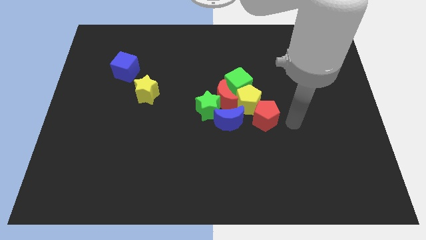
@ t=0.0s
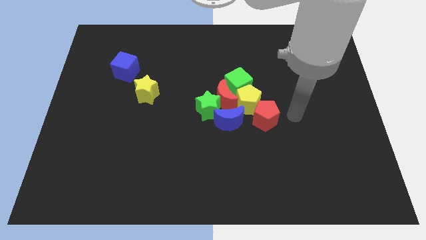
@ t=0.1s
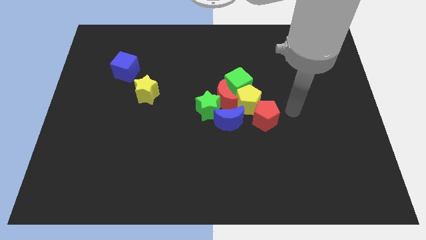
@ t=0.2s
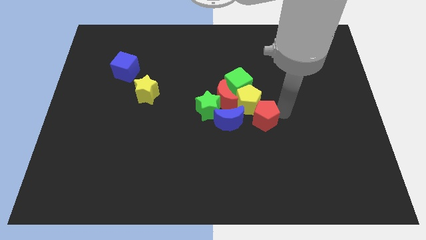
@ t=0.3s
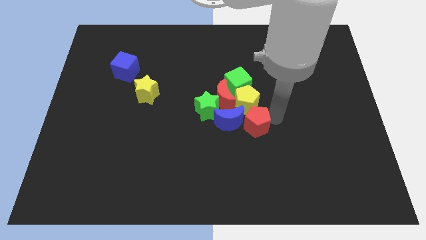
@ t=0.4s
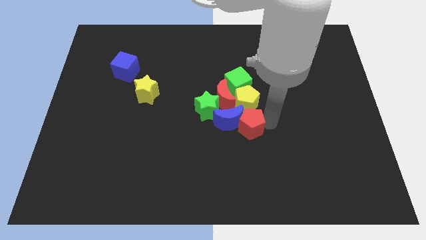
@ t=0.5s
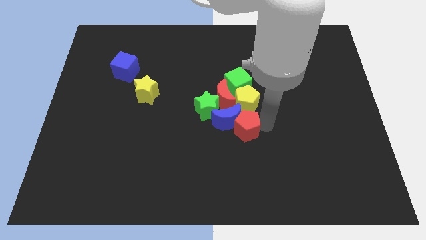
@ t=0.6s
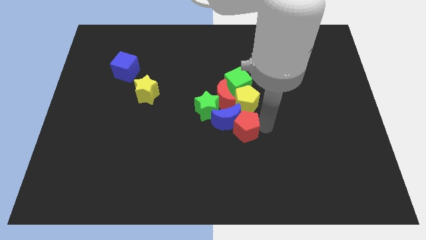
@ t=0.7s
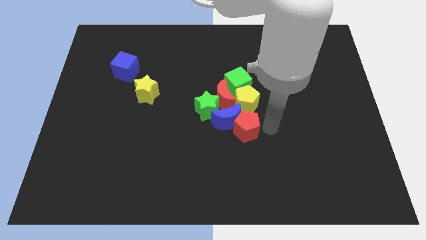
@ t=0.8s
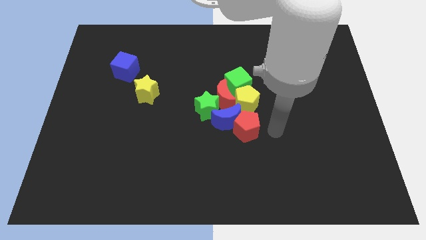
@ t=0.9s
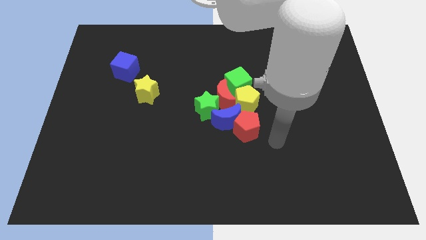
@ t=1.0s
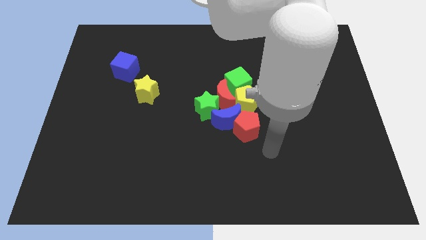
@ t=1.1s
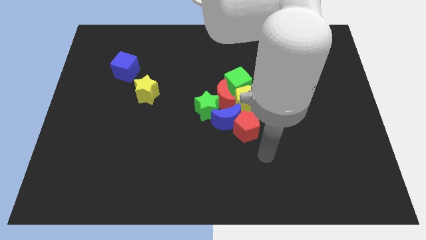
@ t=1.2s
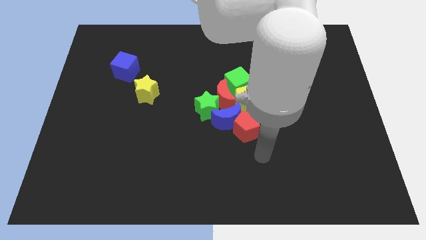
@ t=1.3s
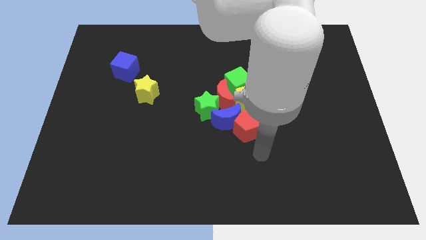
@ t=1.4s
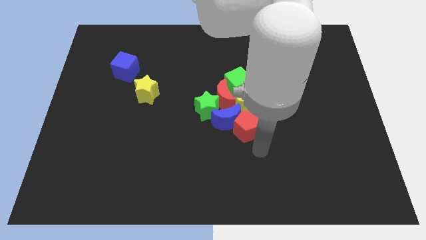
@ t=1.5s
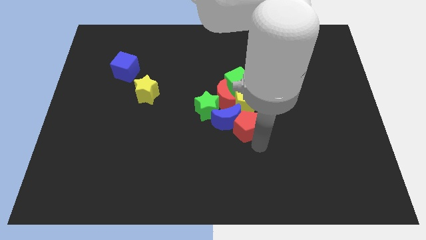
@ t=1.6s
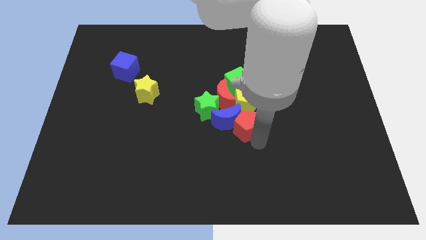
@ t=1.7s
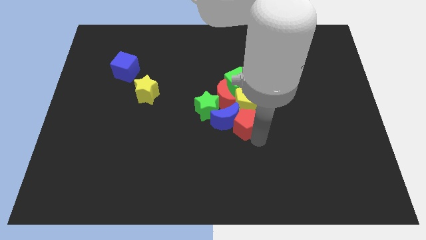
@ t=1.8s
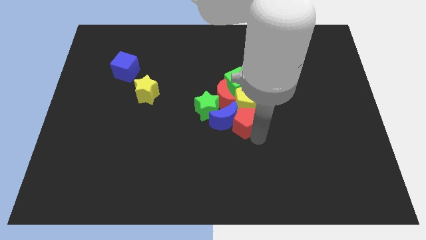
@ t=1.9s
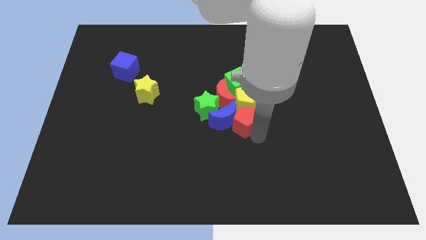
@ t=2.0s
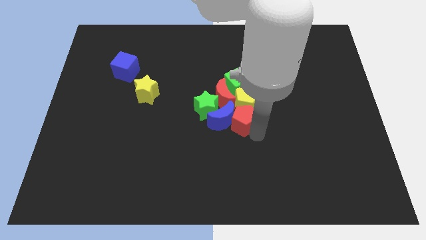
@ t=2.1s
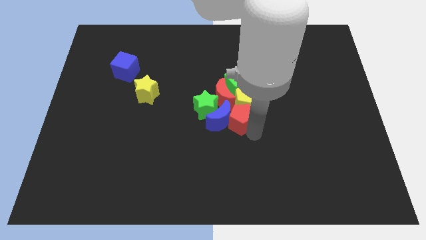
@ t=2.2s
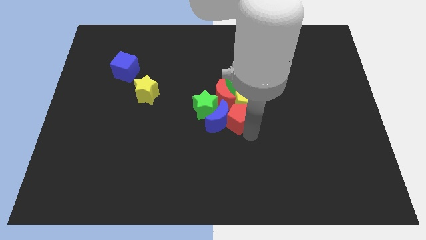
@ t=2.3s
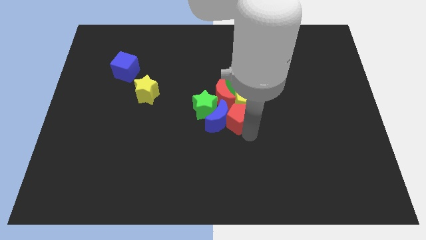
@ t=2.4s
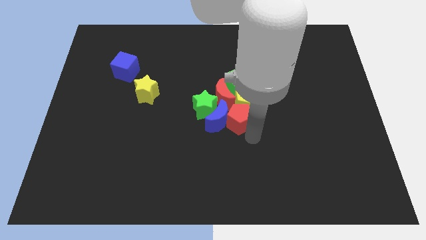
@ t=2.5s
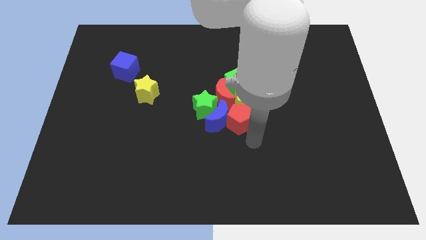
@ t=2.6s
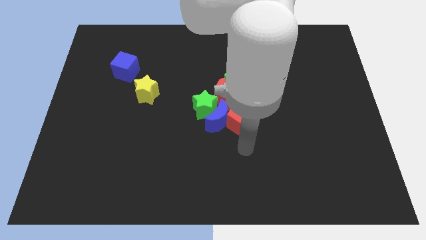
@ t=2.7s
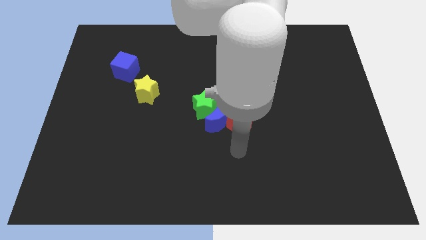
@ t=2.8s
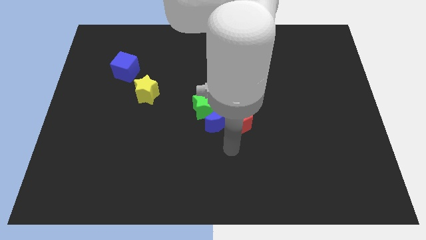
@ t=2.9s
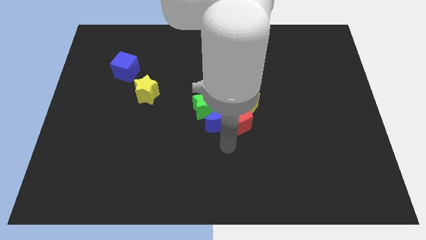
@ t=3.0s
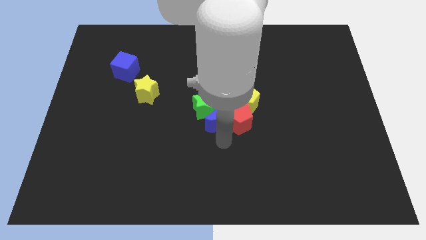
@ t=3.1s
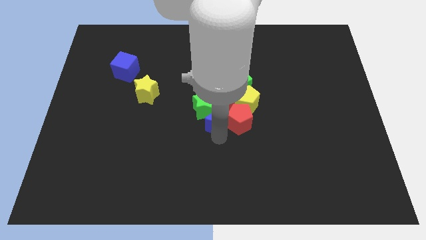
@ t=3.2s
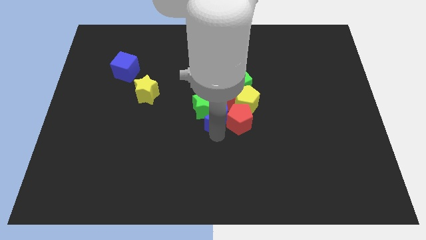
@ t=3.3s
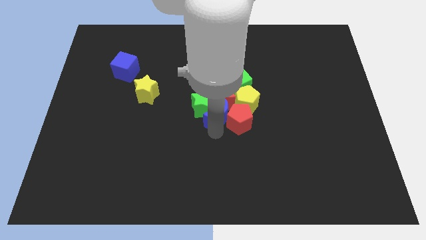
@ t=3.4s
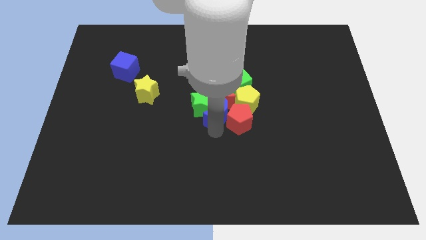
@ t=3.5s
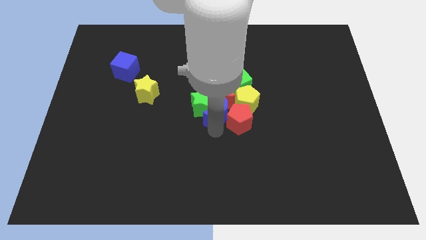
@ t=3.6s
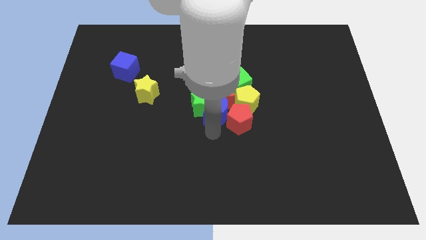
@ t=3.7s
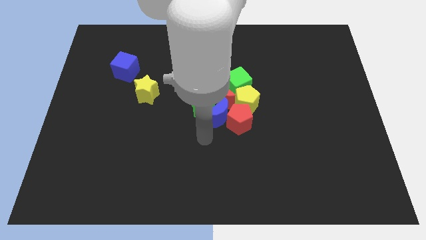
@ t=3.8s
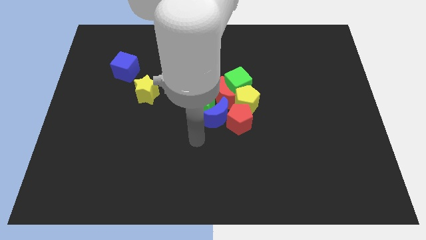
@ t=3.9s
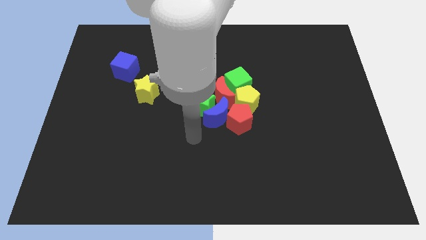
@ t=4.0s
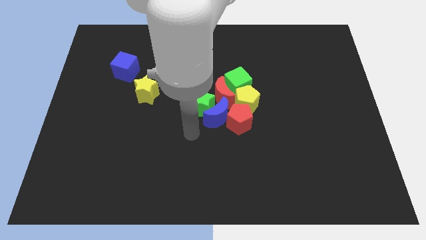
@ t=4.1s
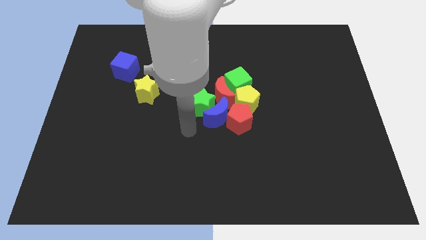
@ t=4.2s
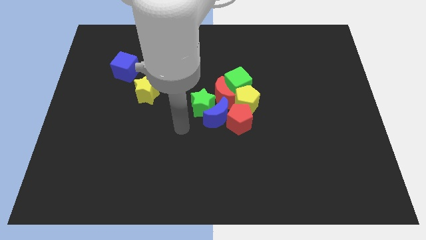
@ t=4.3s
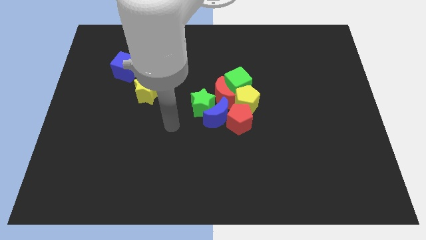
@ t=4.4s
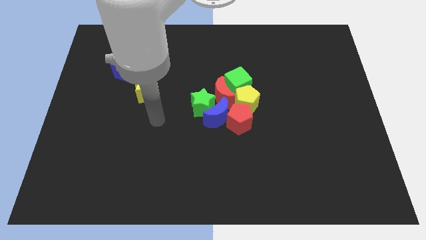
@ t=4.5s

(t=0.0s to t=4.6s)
move the red pentagon to the bottom of the yellow pentagon

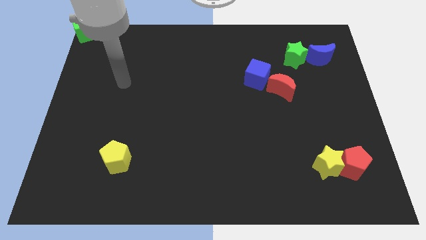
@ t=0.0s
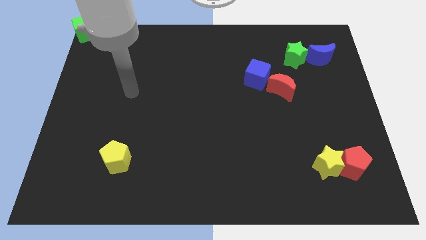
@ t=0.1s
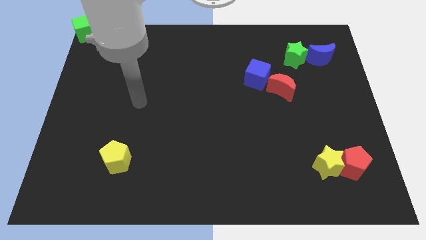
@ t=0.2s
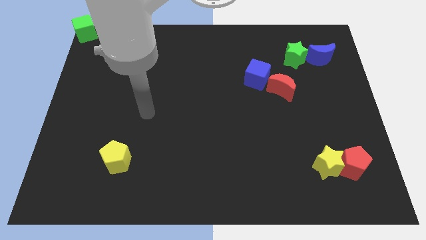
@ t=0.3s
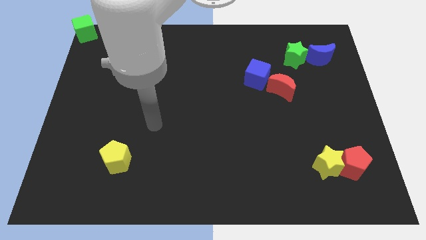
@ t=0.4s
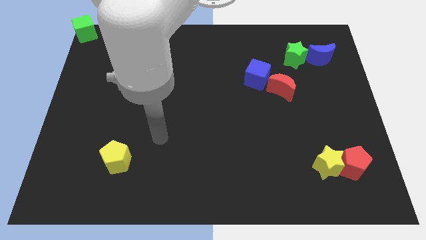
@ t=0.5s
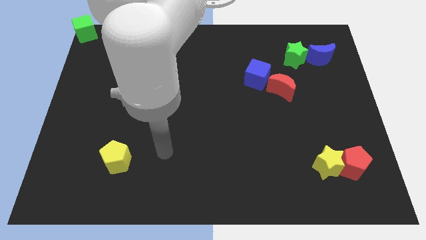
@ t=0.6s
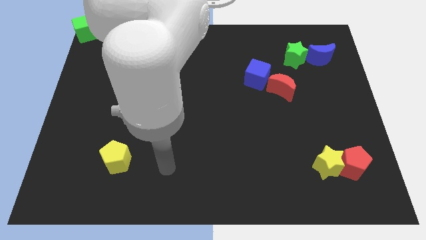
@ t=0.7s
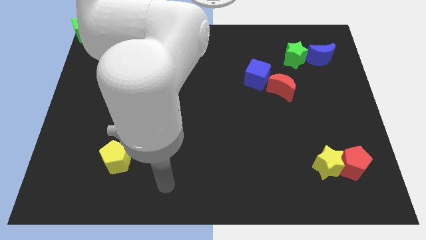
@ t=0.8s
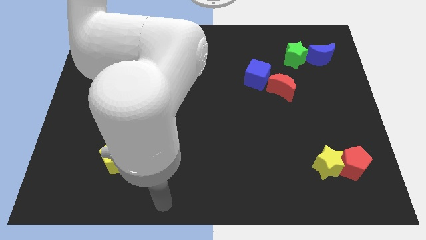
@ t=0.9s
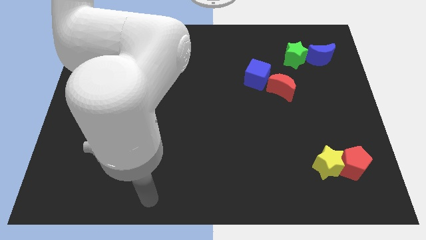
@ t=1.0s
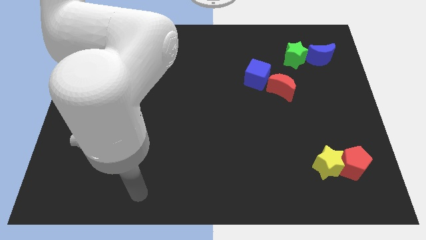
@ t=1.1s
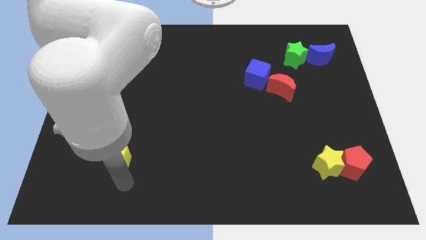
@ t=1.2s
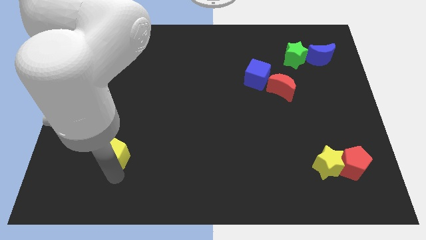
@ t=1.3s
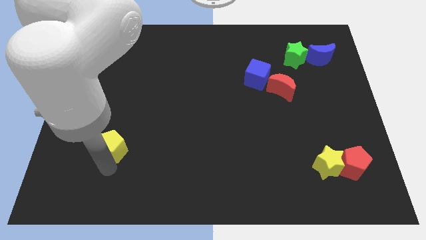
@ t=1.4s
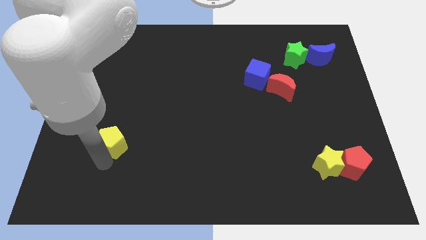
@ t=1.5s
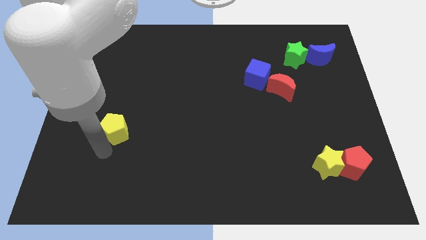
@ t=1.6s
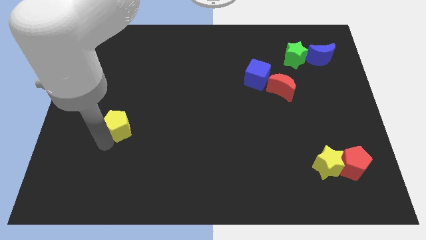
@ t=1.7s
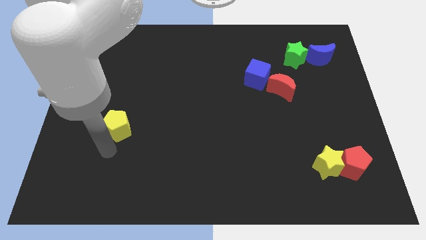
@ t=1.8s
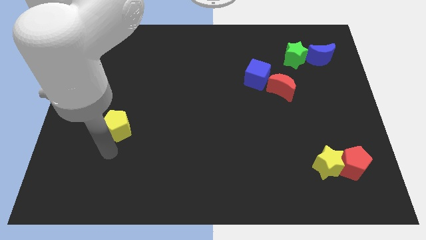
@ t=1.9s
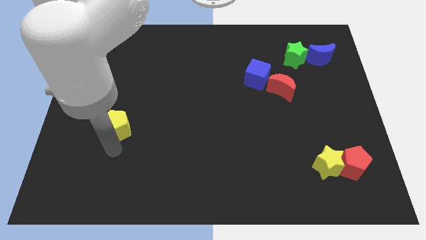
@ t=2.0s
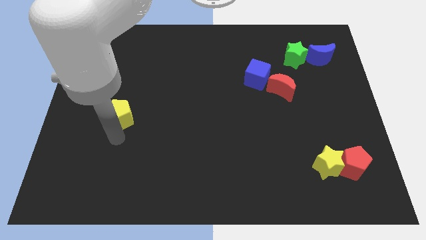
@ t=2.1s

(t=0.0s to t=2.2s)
drag the yellow pentagon to the center left of the board

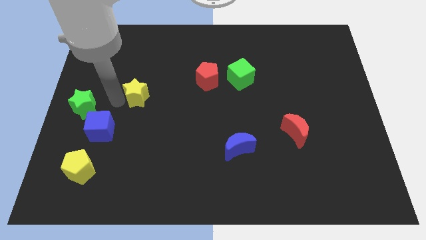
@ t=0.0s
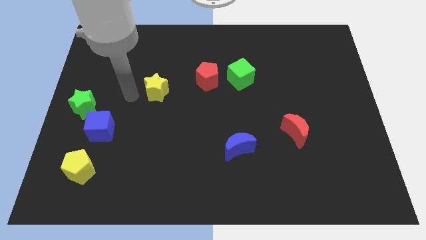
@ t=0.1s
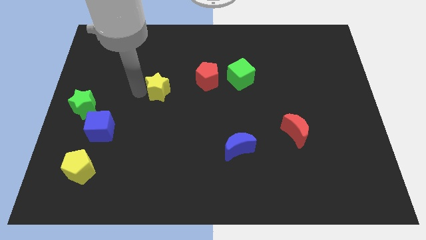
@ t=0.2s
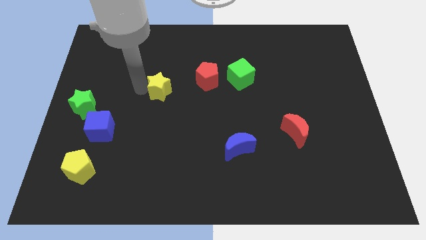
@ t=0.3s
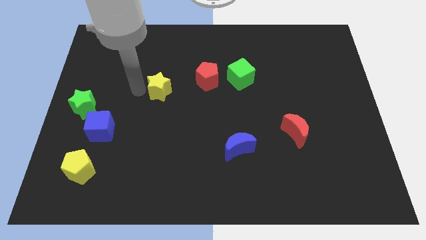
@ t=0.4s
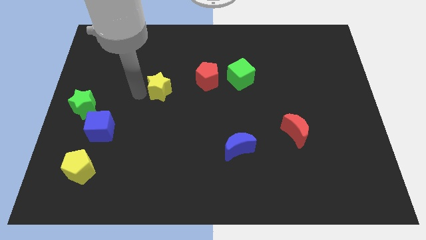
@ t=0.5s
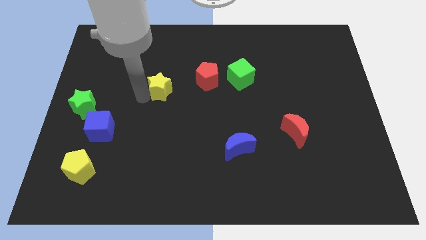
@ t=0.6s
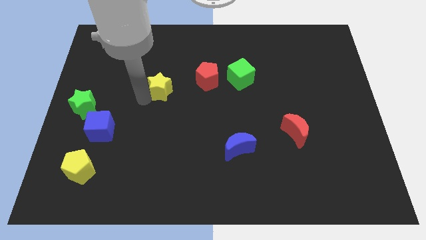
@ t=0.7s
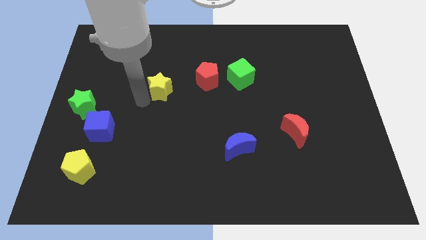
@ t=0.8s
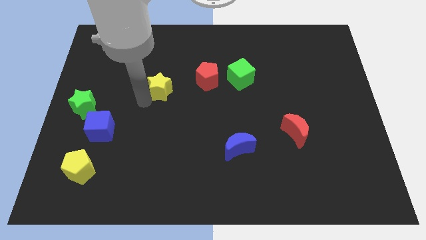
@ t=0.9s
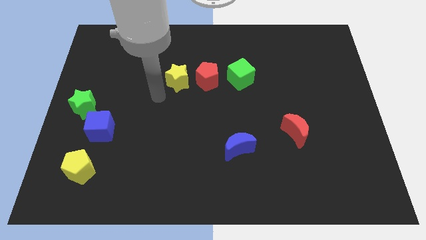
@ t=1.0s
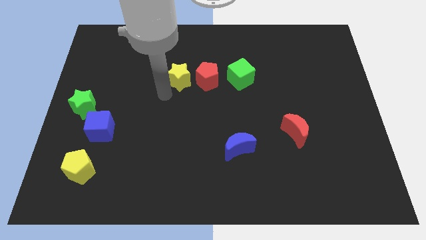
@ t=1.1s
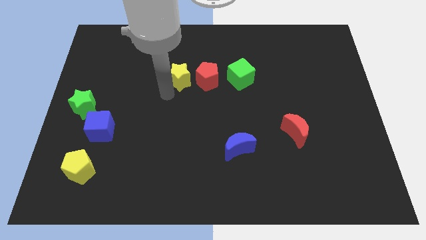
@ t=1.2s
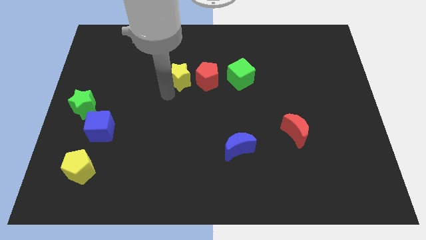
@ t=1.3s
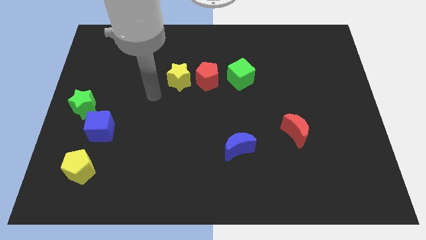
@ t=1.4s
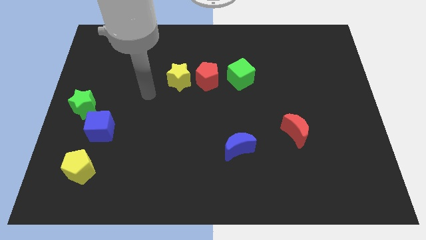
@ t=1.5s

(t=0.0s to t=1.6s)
put the yellow star left to red pentagon

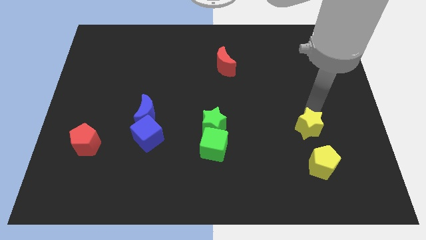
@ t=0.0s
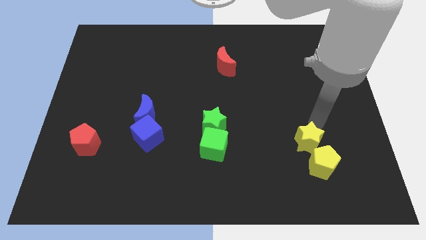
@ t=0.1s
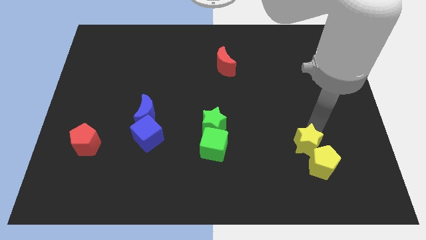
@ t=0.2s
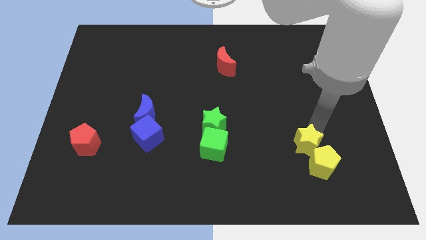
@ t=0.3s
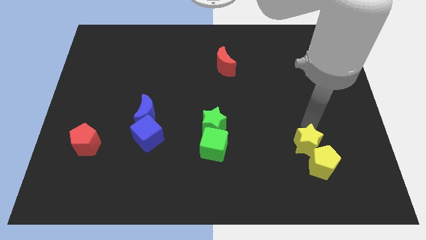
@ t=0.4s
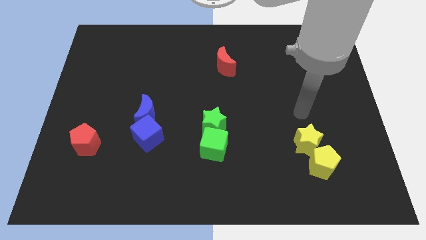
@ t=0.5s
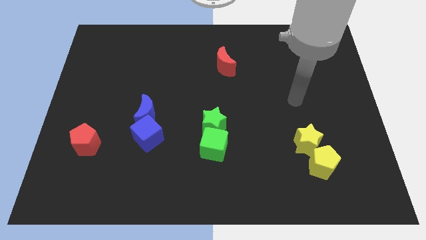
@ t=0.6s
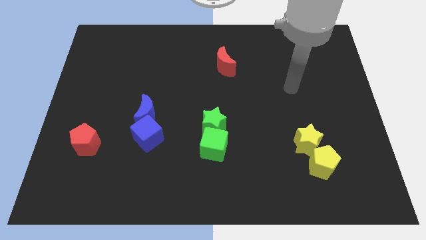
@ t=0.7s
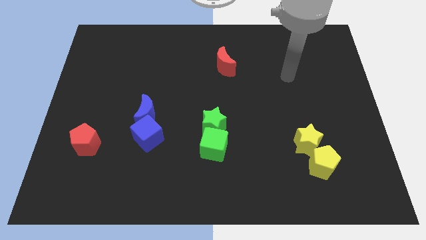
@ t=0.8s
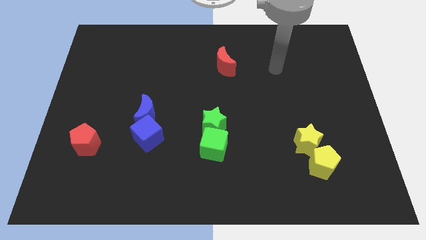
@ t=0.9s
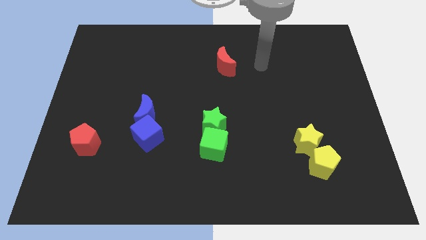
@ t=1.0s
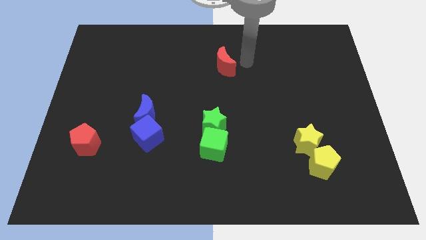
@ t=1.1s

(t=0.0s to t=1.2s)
move the yellow star towards the yellow pentagon
